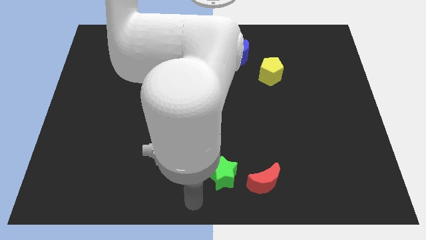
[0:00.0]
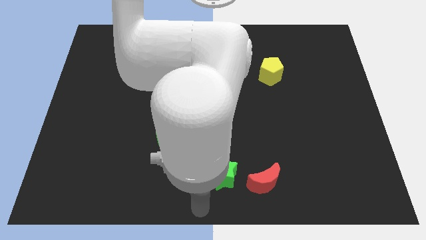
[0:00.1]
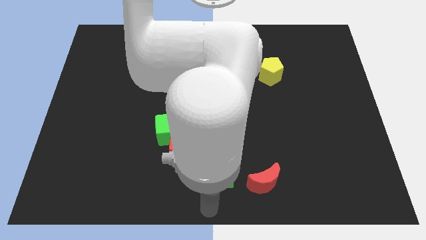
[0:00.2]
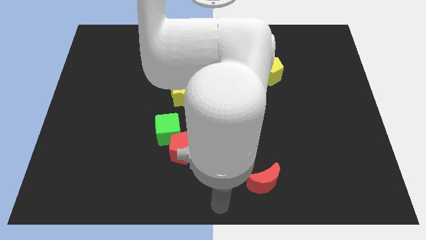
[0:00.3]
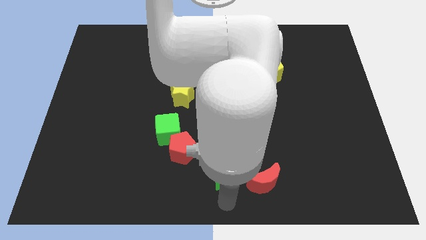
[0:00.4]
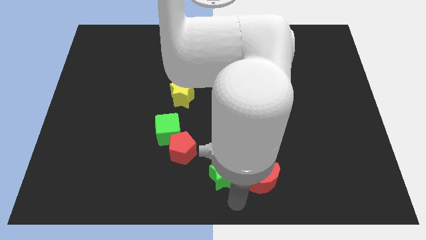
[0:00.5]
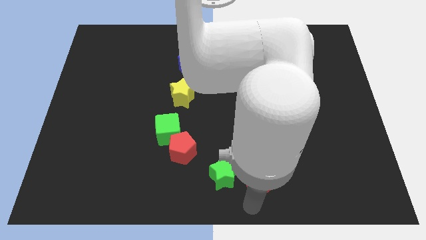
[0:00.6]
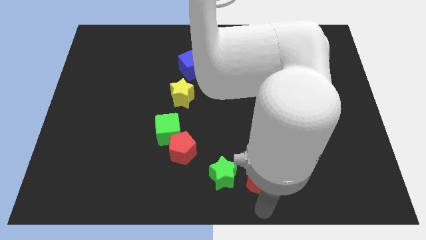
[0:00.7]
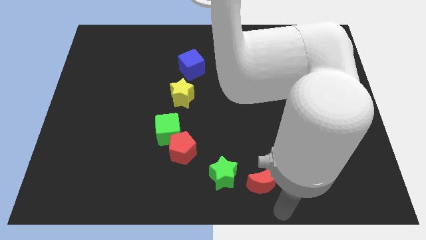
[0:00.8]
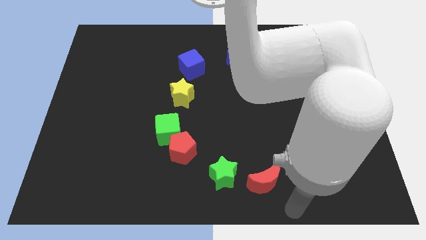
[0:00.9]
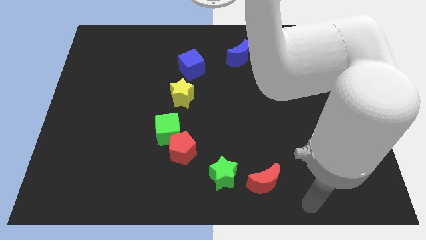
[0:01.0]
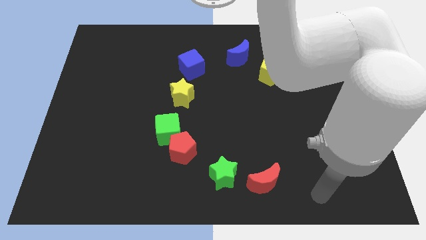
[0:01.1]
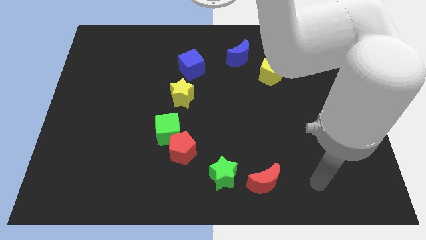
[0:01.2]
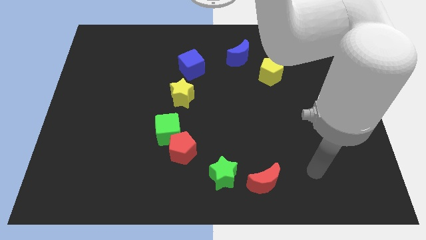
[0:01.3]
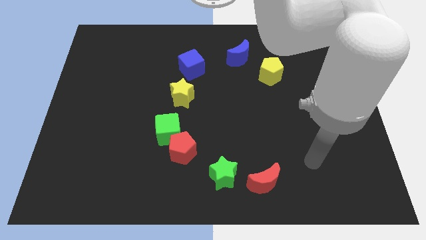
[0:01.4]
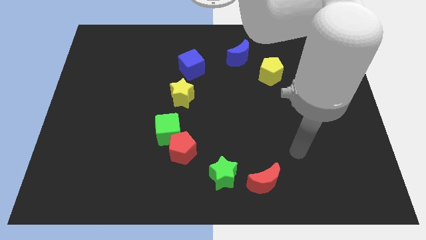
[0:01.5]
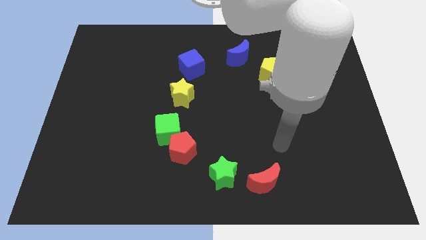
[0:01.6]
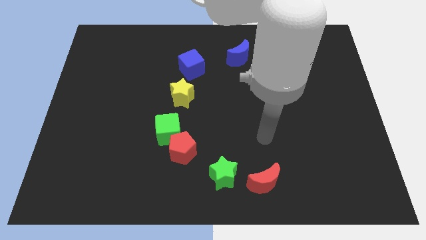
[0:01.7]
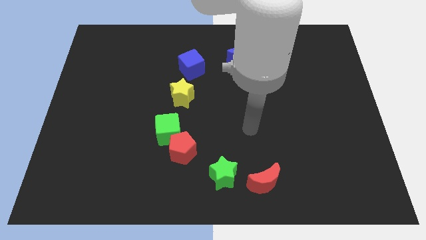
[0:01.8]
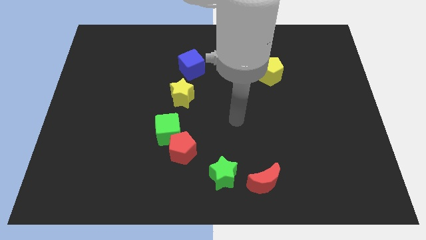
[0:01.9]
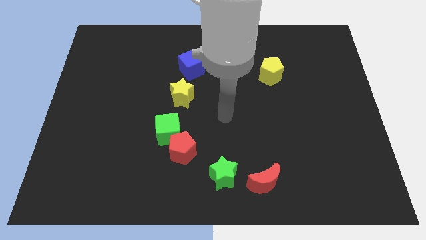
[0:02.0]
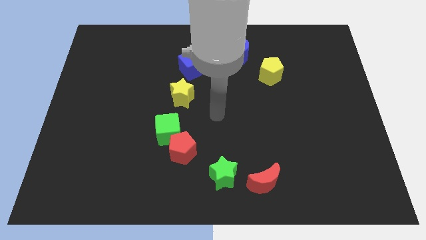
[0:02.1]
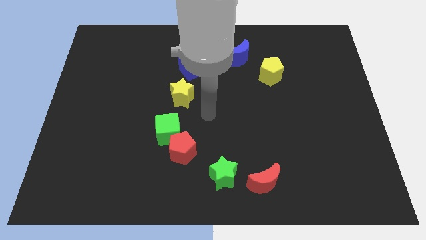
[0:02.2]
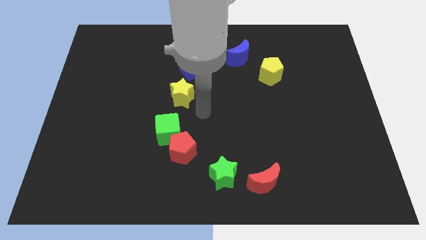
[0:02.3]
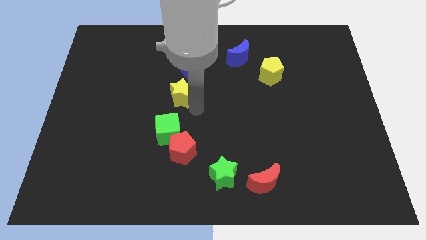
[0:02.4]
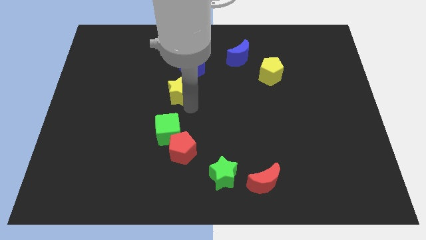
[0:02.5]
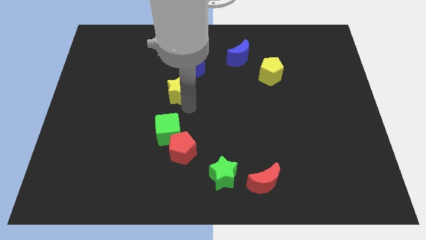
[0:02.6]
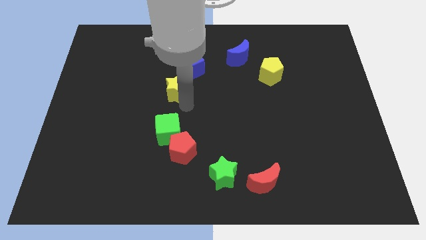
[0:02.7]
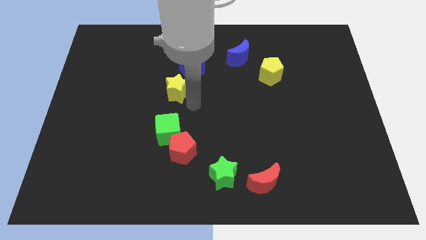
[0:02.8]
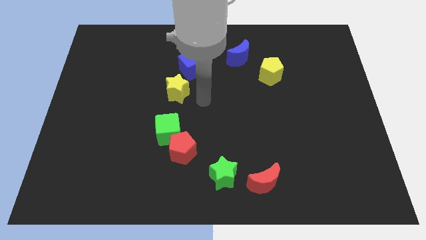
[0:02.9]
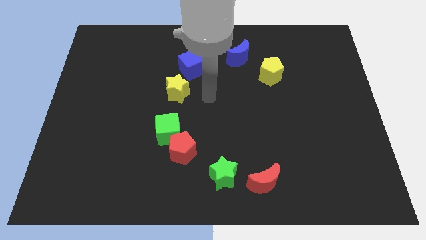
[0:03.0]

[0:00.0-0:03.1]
place your arm to the right of the yellow star

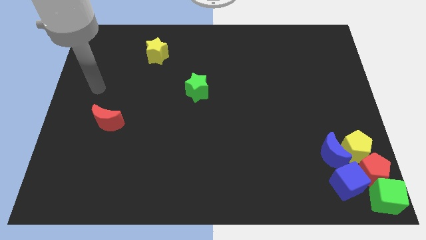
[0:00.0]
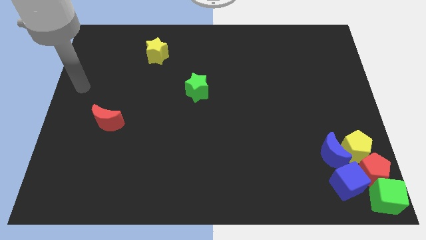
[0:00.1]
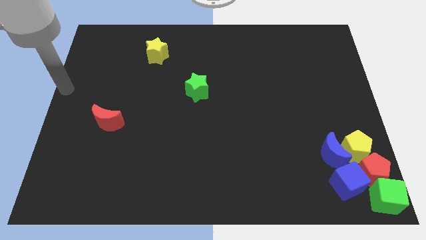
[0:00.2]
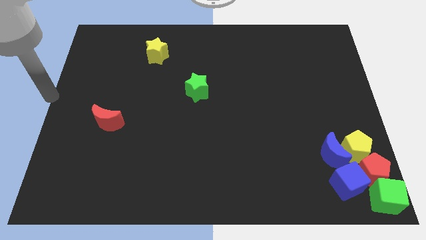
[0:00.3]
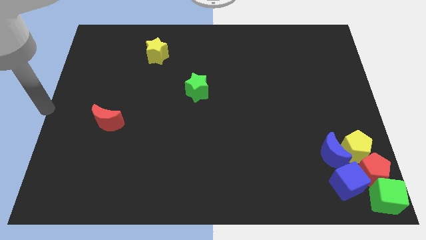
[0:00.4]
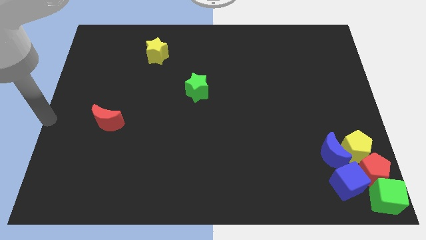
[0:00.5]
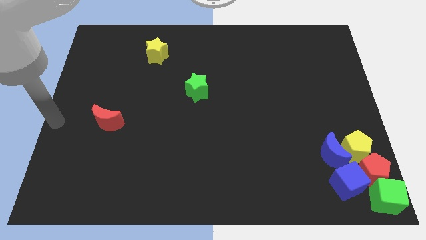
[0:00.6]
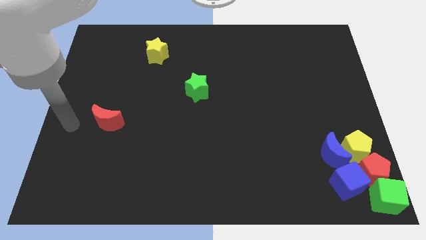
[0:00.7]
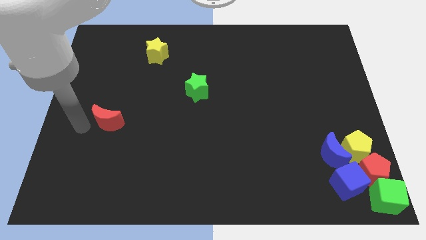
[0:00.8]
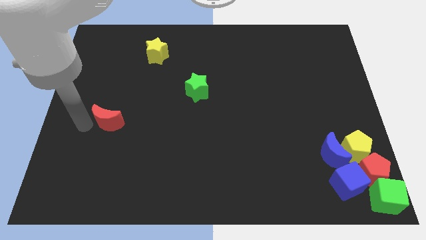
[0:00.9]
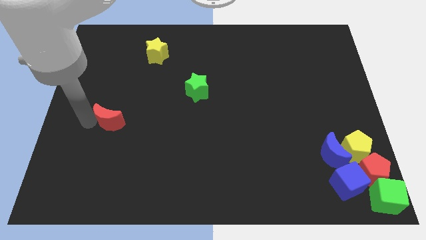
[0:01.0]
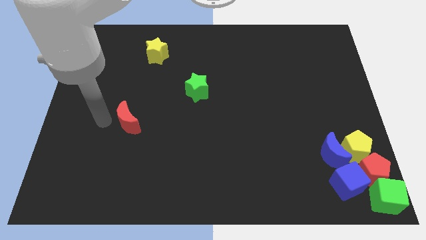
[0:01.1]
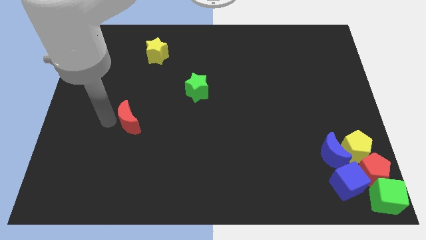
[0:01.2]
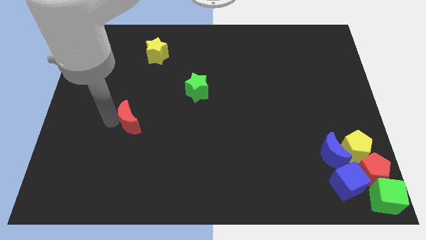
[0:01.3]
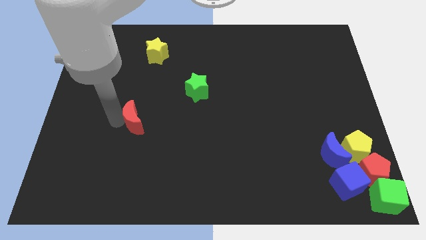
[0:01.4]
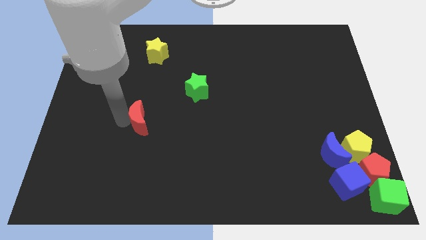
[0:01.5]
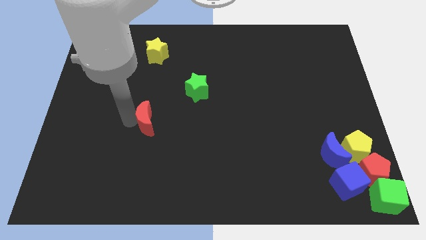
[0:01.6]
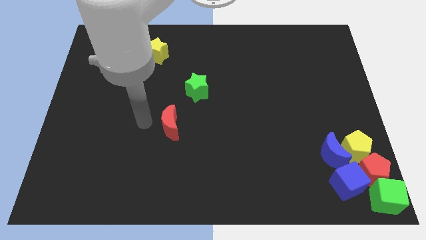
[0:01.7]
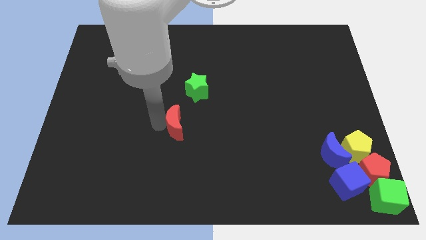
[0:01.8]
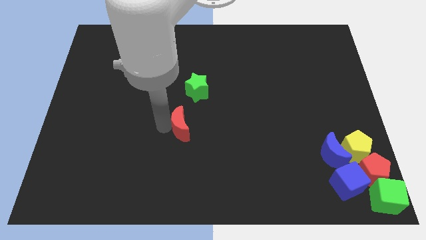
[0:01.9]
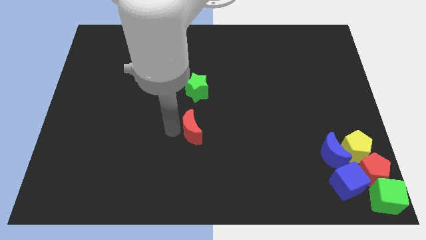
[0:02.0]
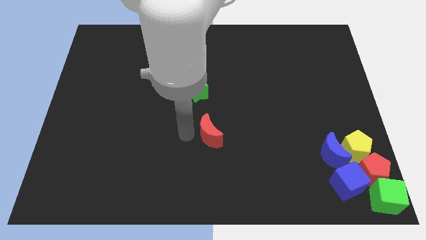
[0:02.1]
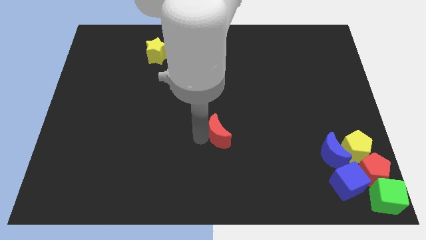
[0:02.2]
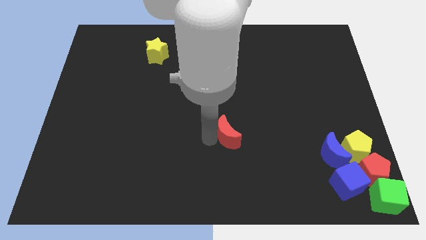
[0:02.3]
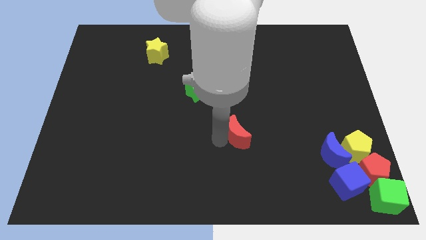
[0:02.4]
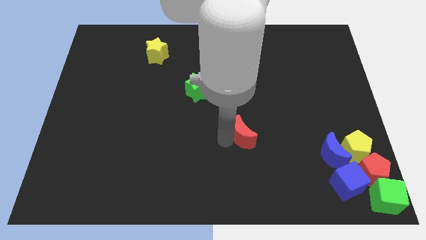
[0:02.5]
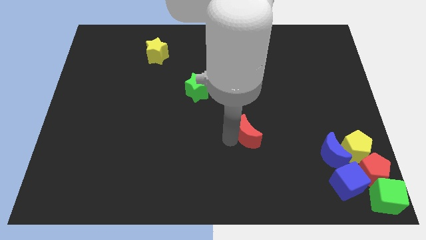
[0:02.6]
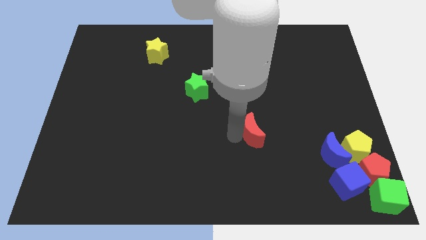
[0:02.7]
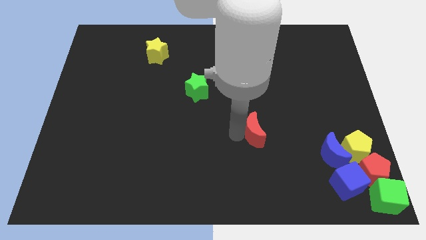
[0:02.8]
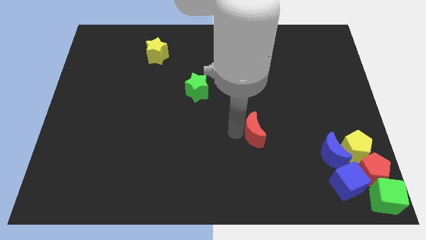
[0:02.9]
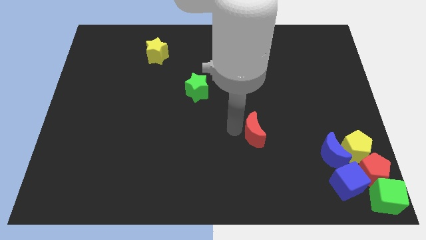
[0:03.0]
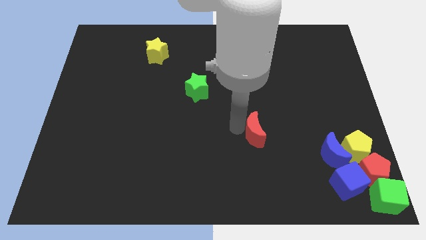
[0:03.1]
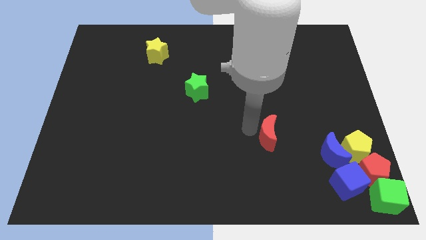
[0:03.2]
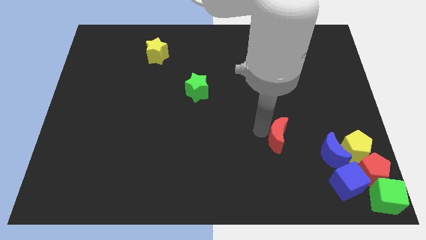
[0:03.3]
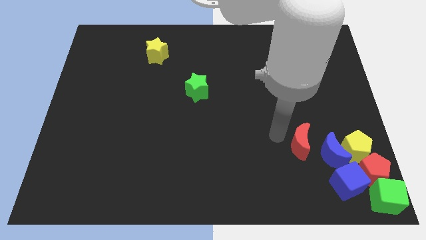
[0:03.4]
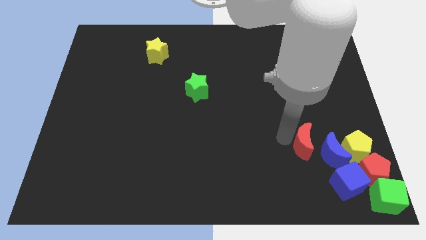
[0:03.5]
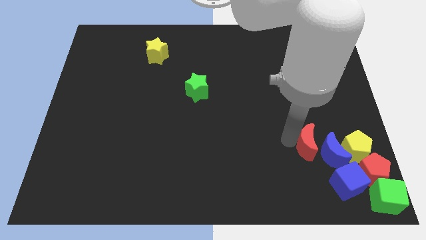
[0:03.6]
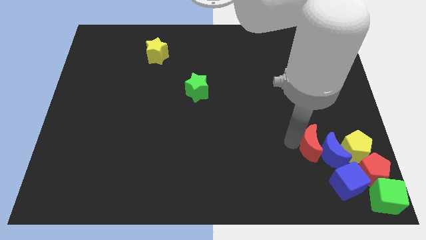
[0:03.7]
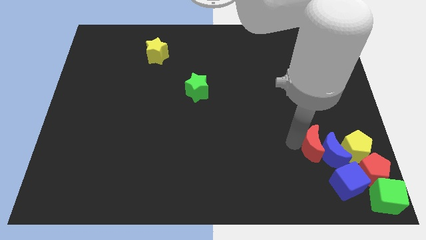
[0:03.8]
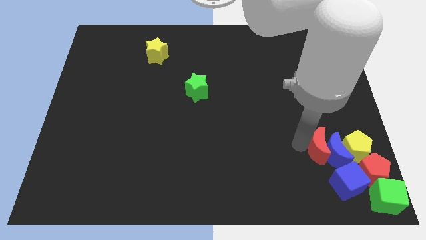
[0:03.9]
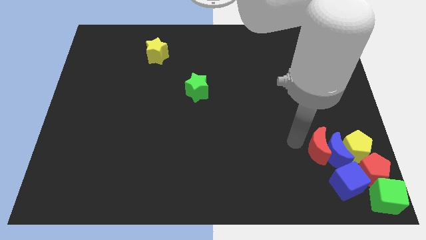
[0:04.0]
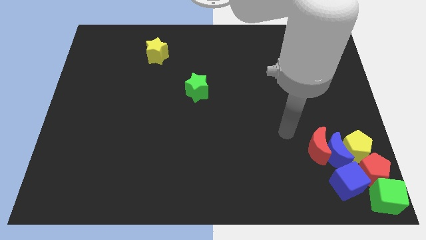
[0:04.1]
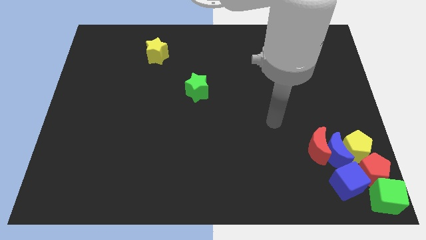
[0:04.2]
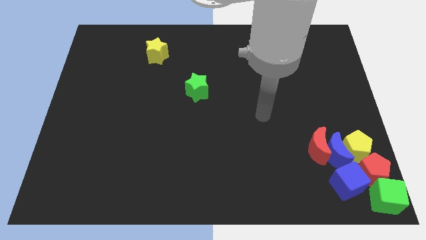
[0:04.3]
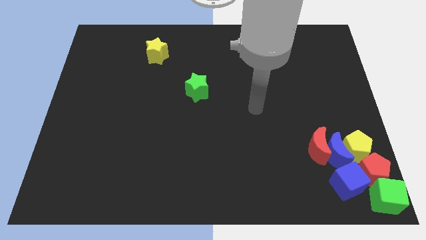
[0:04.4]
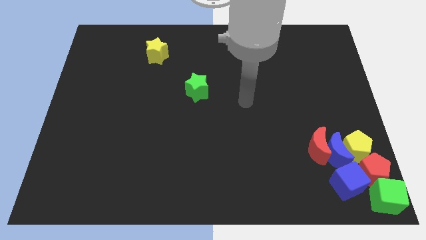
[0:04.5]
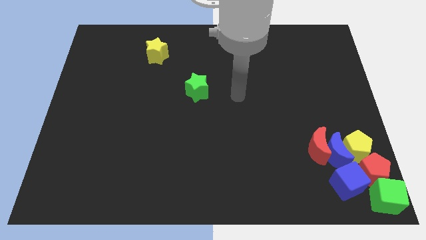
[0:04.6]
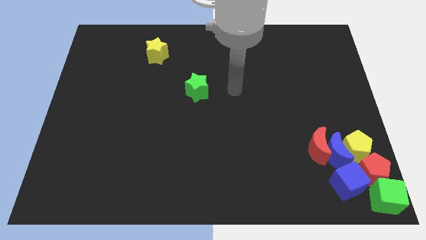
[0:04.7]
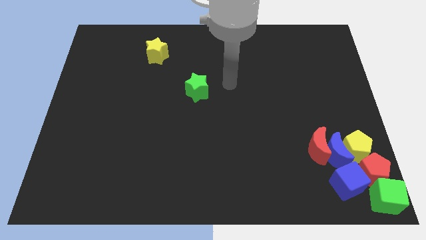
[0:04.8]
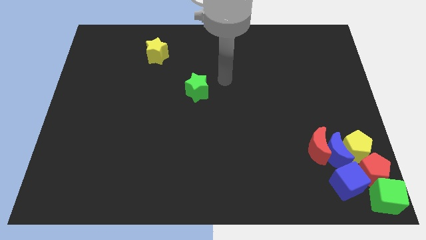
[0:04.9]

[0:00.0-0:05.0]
drag the red moon into the group of blocks

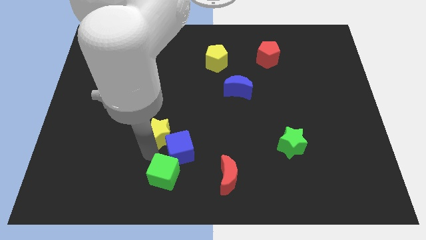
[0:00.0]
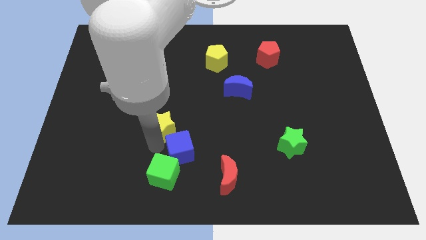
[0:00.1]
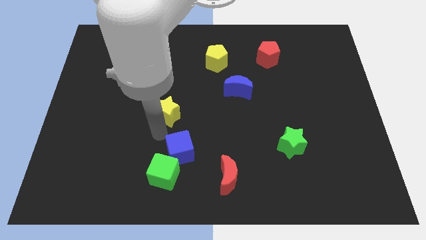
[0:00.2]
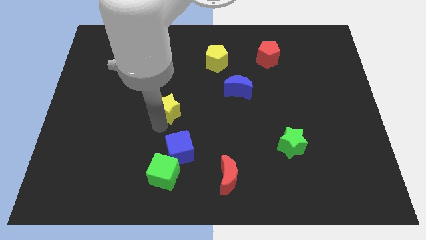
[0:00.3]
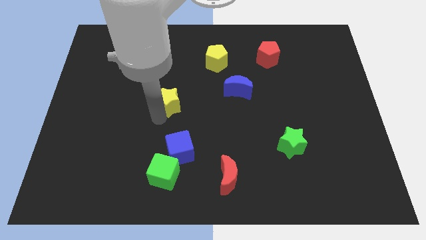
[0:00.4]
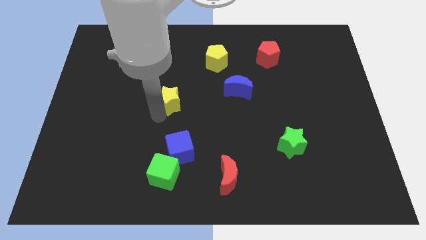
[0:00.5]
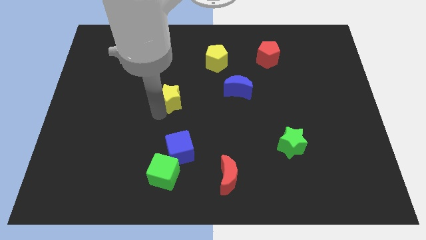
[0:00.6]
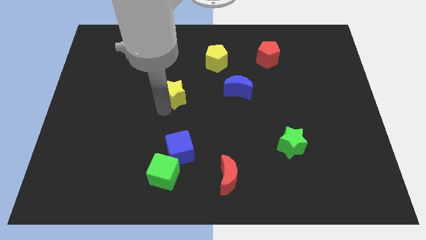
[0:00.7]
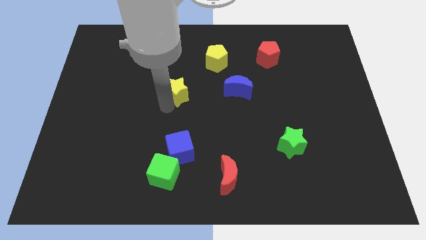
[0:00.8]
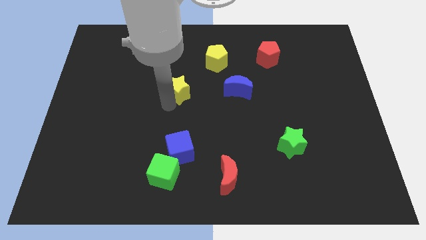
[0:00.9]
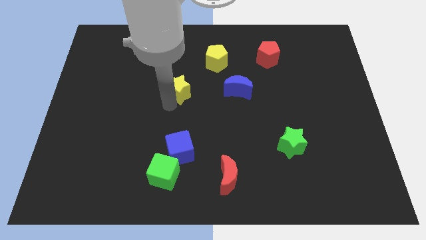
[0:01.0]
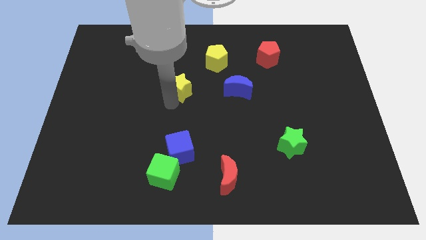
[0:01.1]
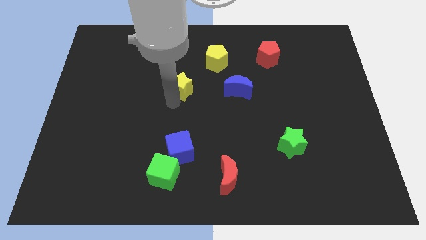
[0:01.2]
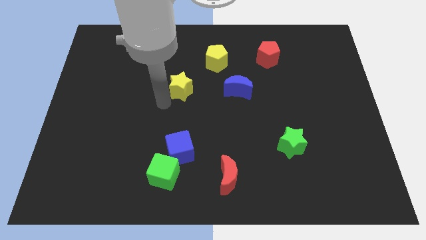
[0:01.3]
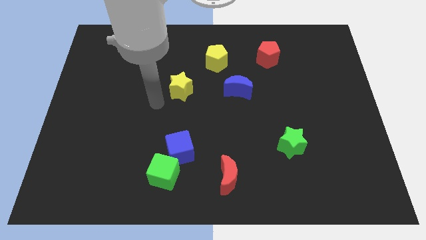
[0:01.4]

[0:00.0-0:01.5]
place the yellow star left to the blue moon
